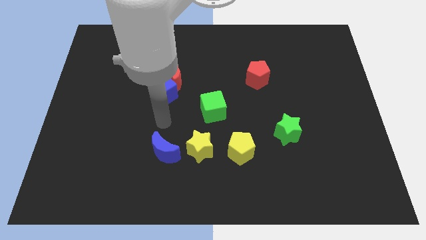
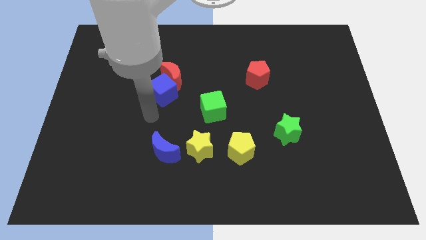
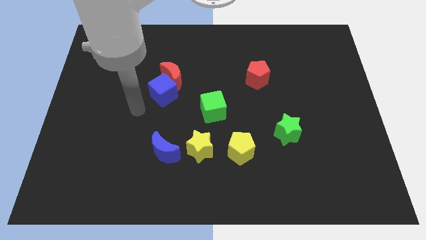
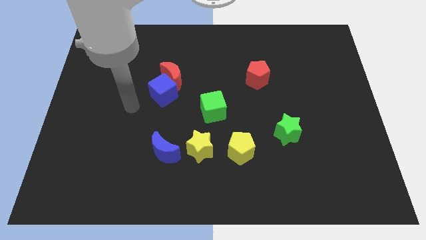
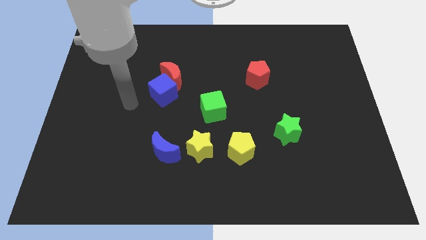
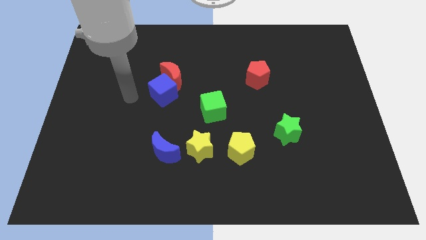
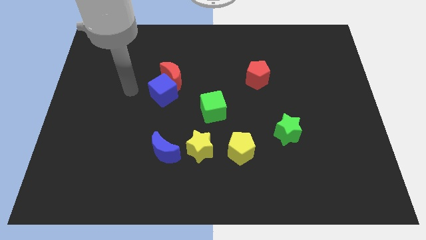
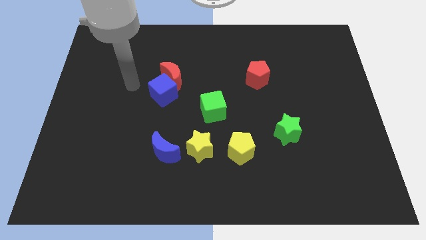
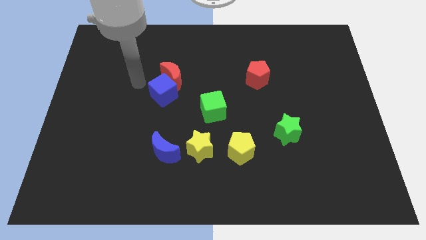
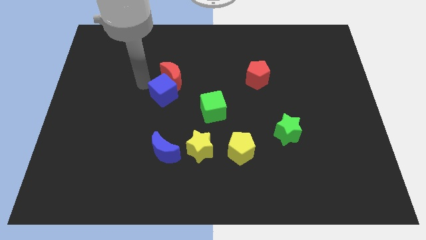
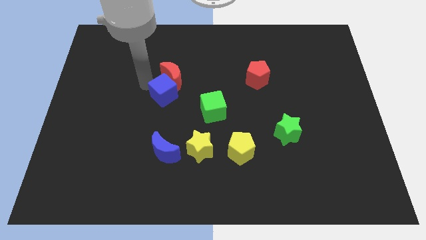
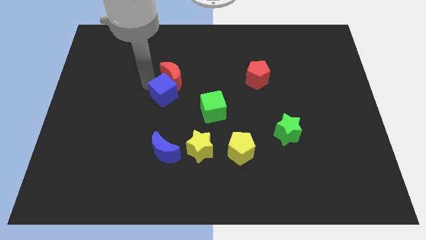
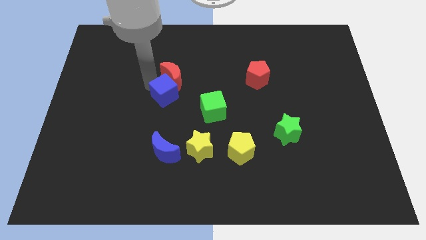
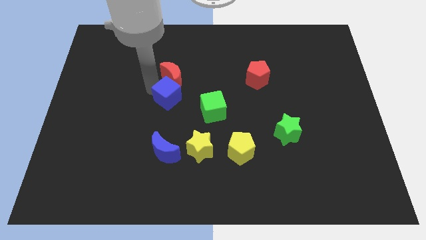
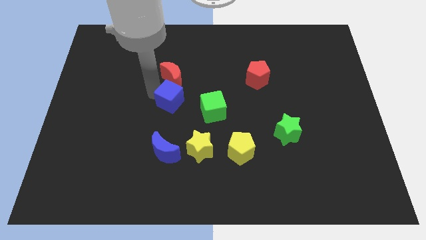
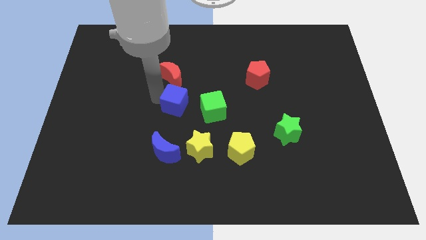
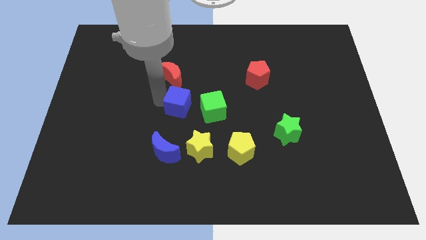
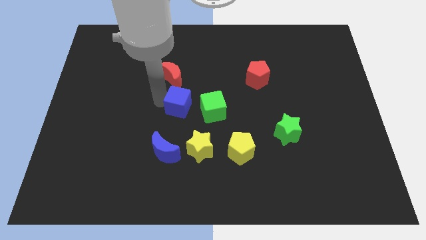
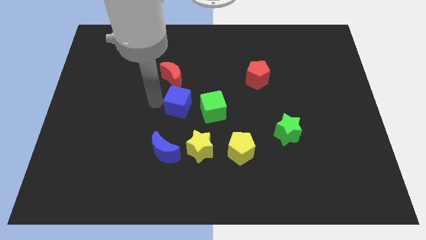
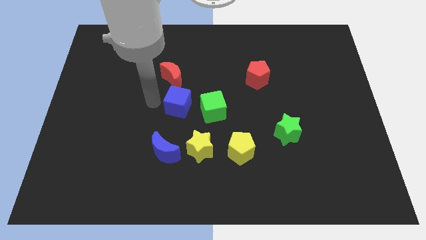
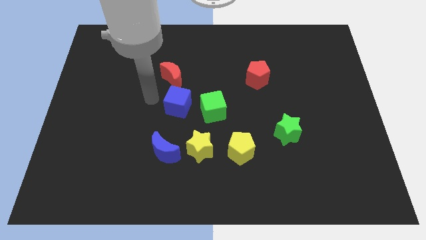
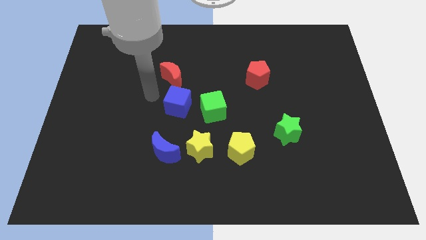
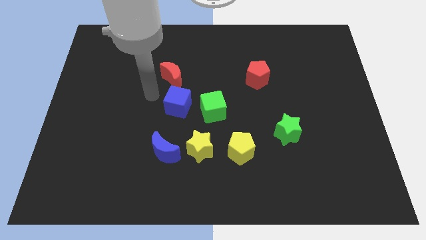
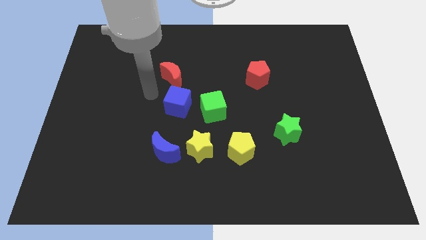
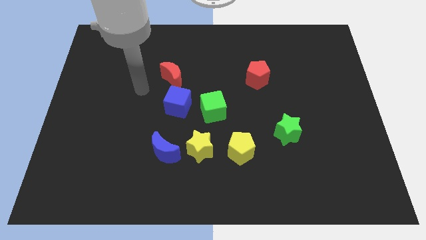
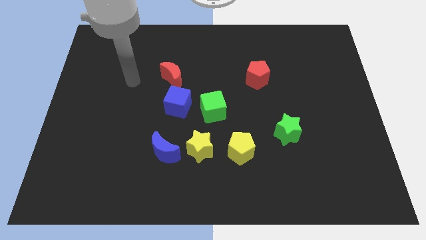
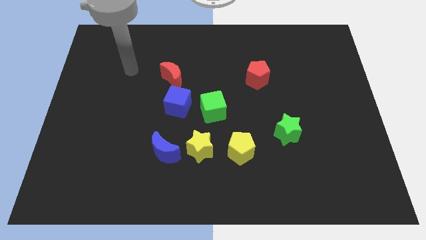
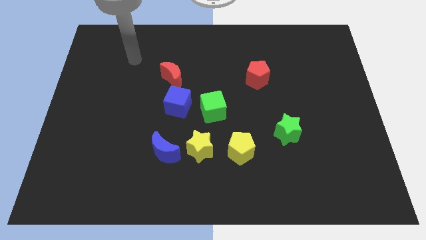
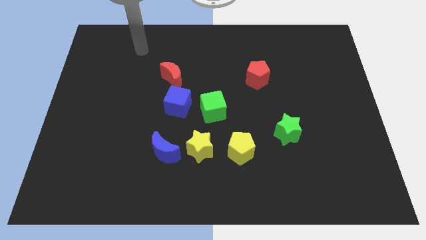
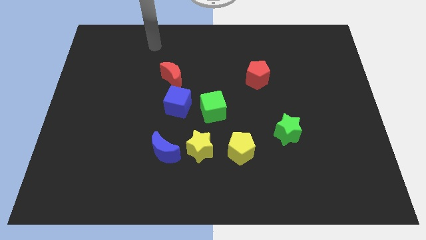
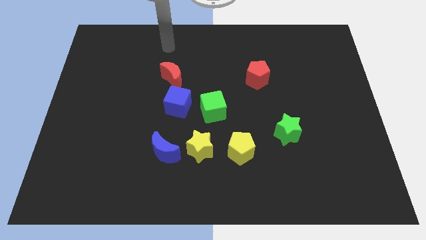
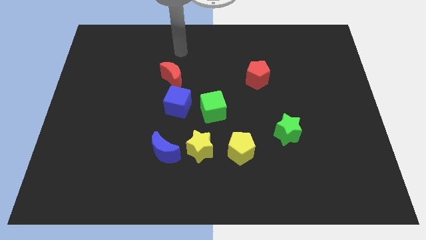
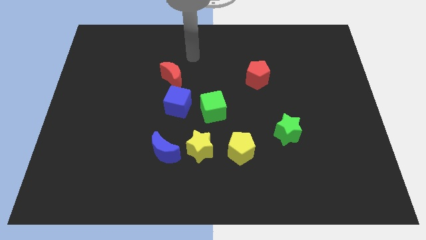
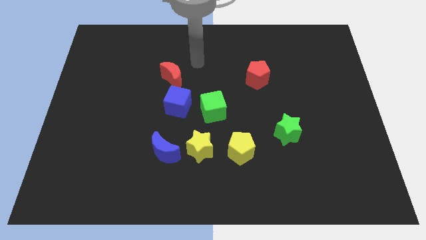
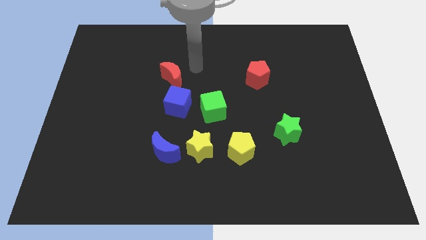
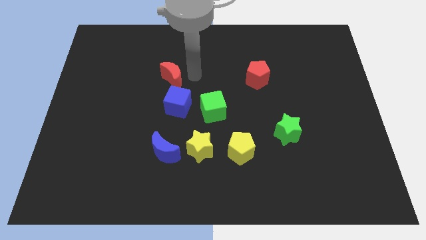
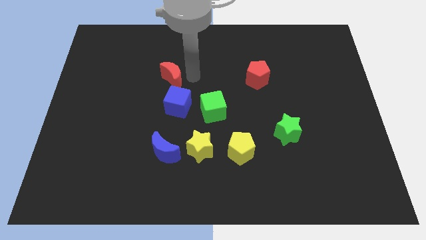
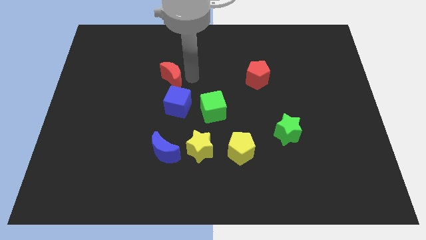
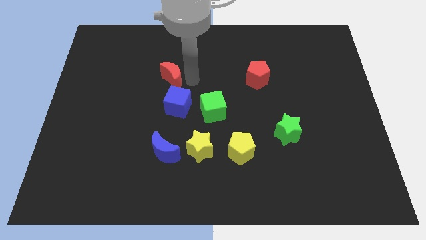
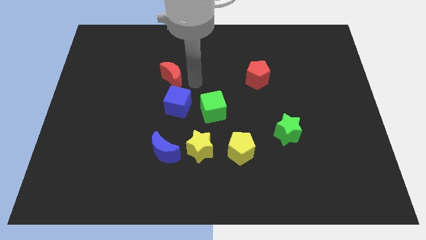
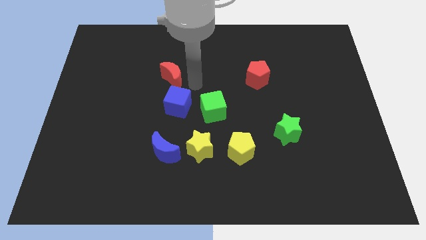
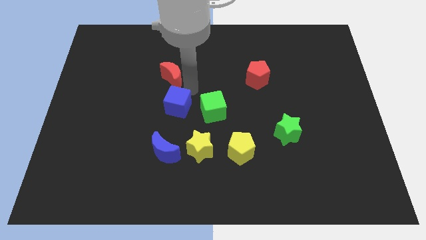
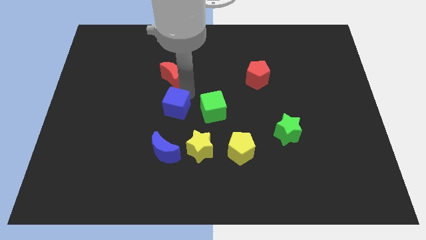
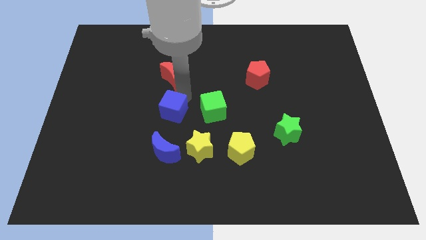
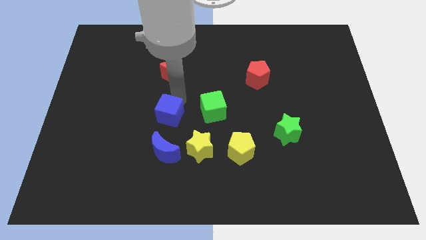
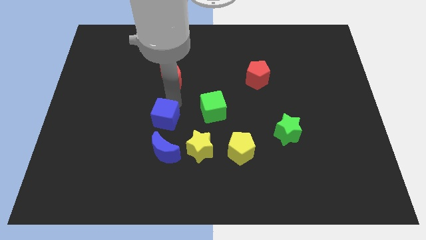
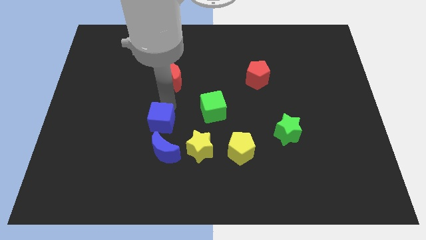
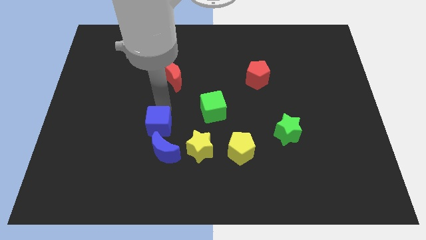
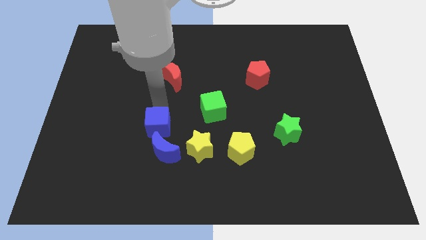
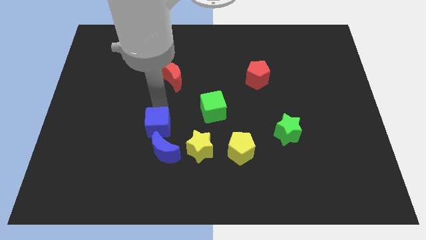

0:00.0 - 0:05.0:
separate the blue cube from the red moon

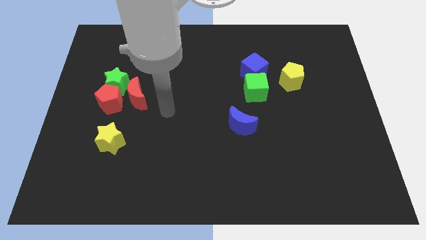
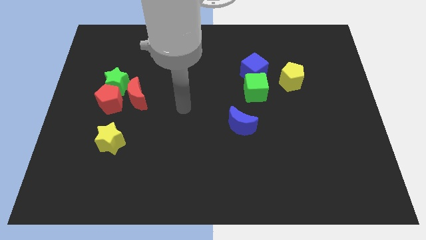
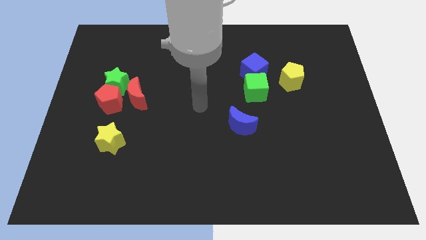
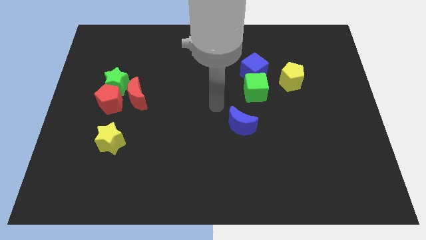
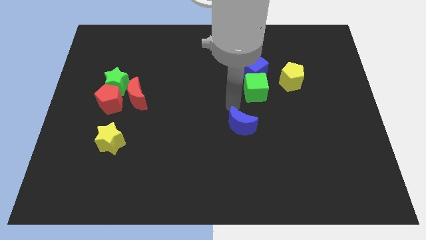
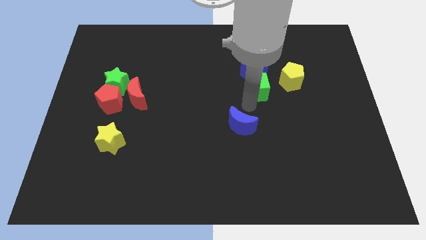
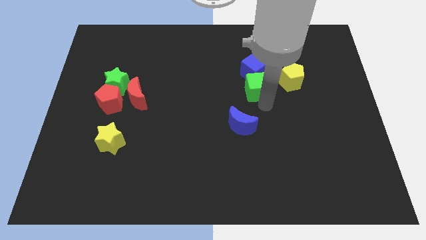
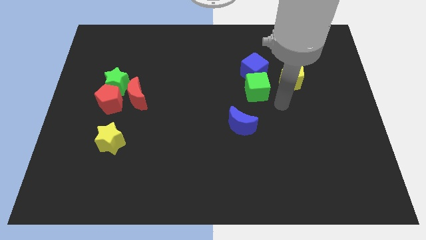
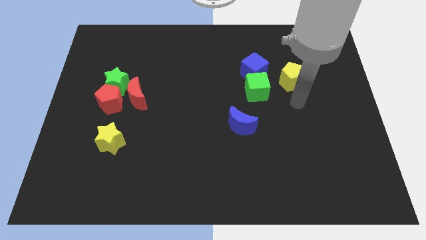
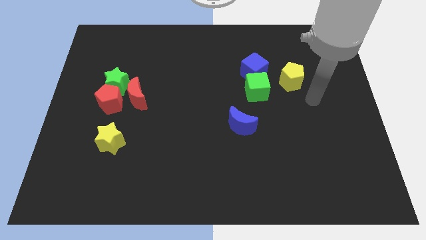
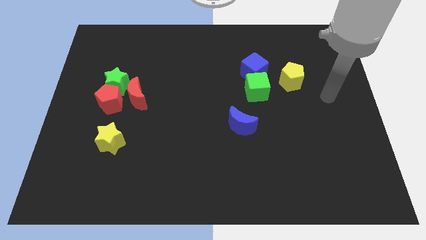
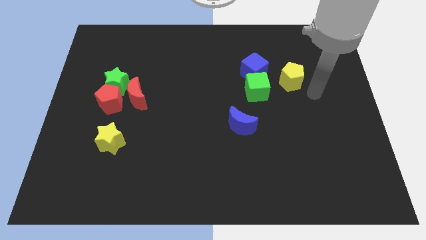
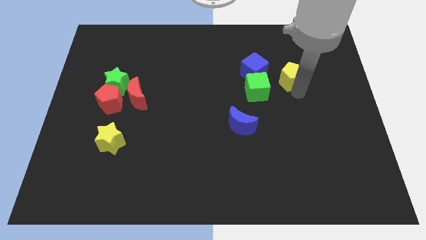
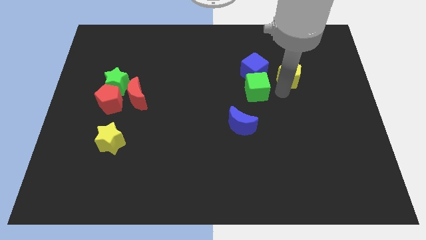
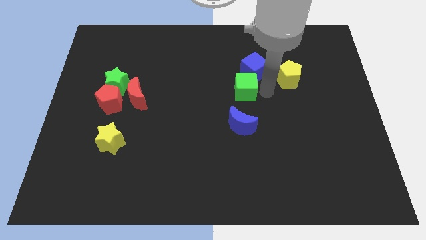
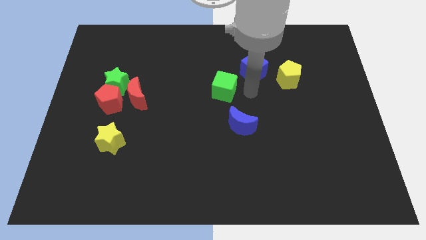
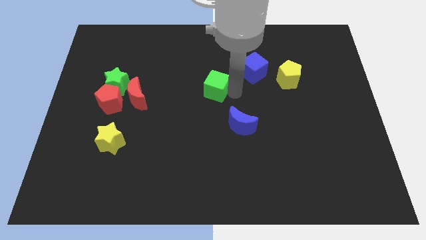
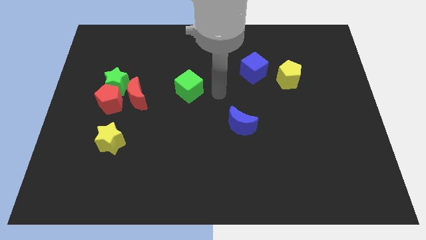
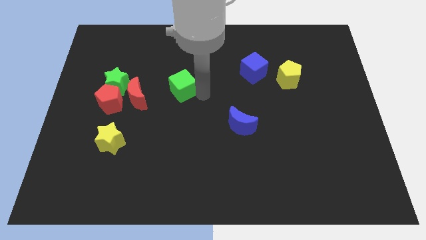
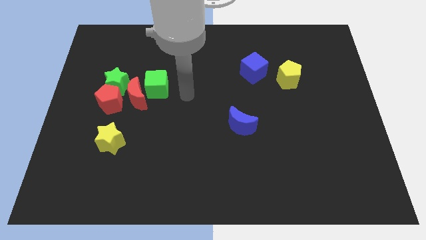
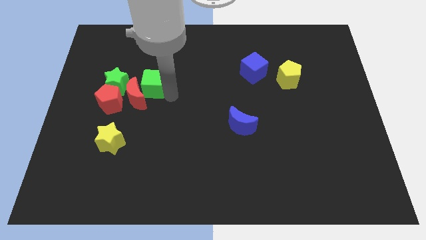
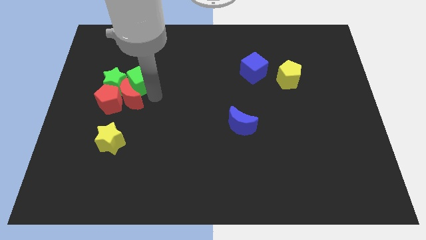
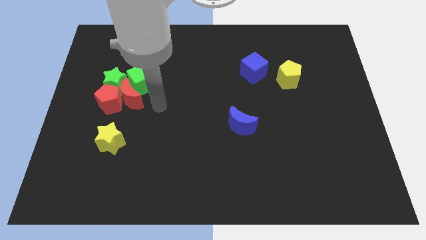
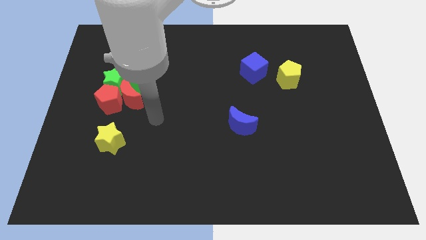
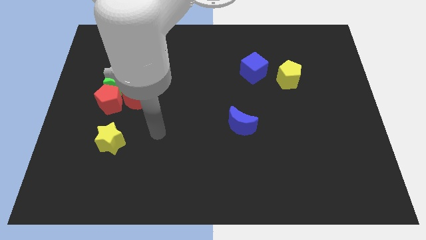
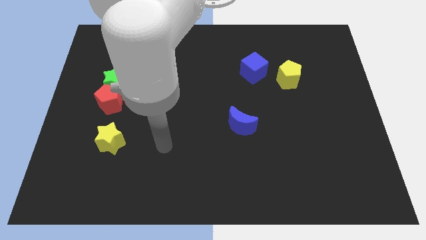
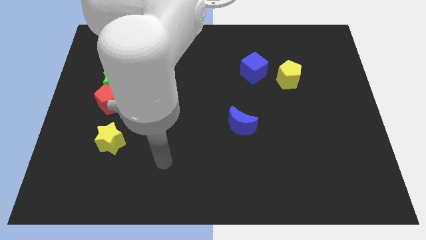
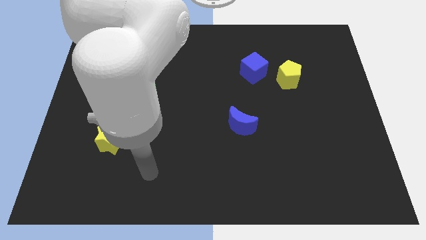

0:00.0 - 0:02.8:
move the green cube into the group of blocks

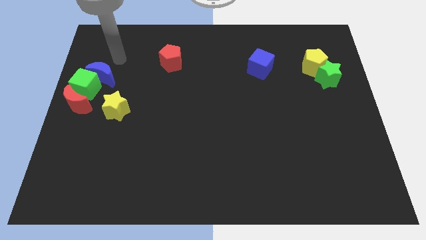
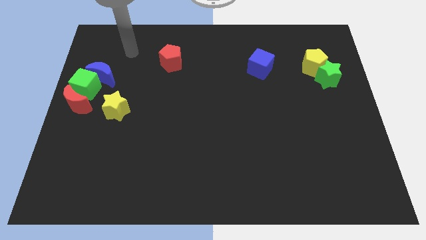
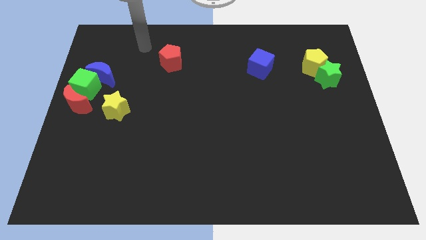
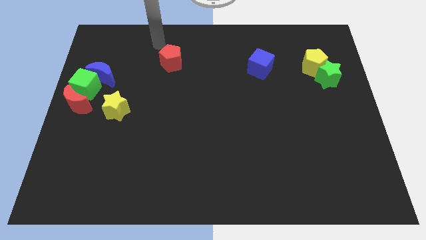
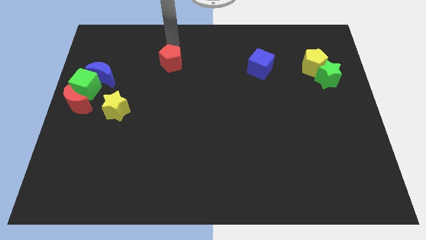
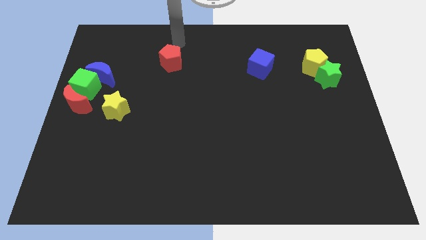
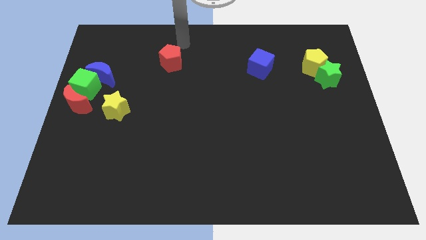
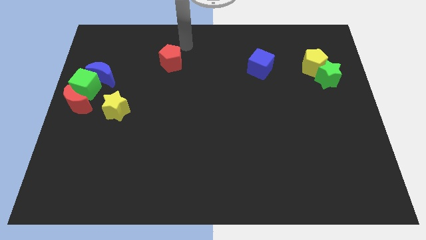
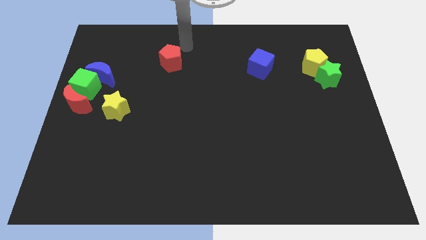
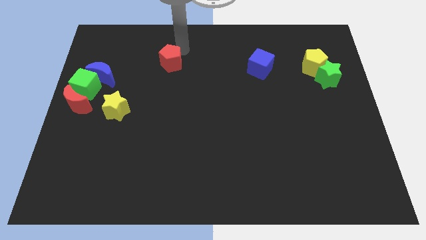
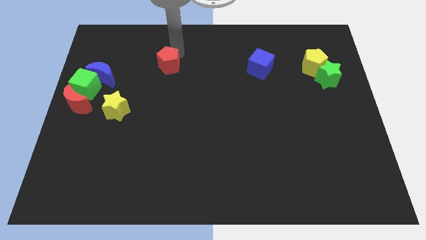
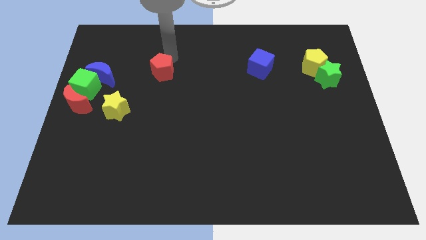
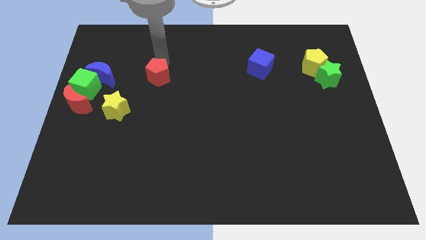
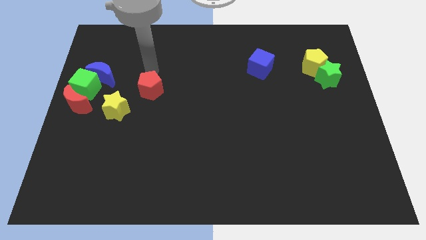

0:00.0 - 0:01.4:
push the red pentagon to the right of the blue crescent
